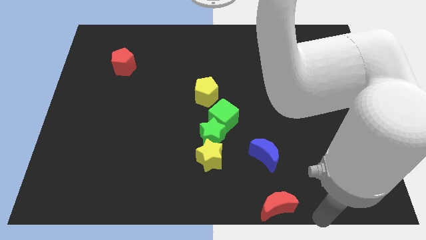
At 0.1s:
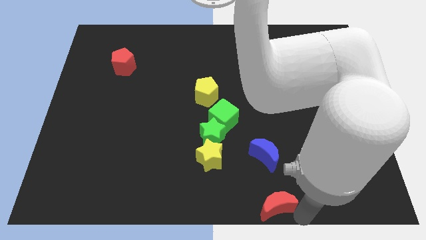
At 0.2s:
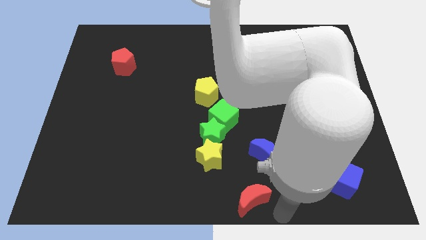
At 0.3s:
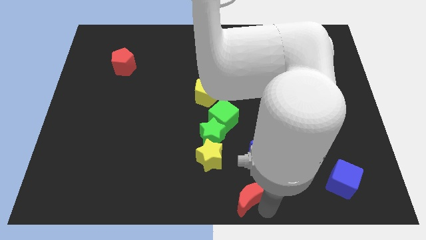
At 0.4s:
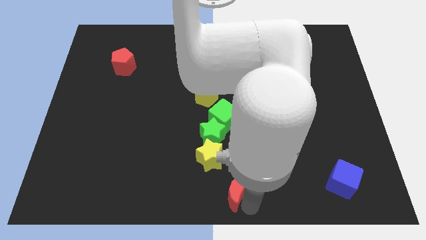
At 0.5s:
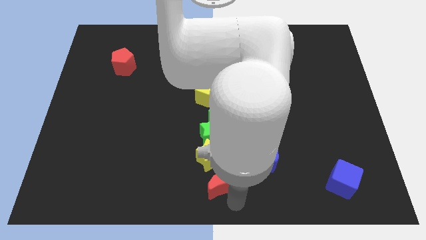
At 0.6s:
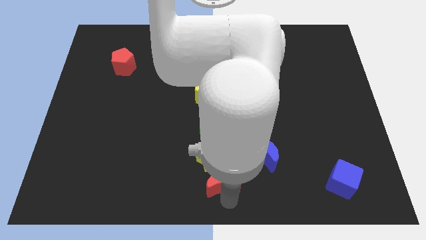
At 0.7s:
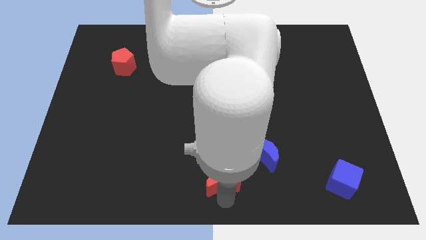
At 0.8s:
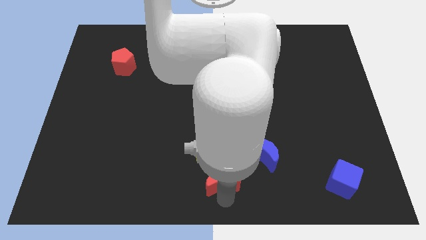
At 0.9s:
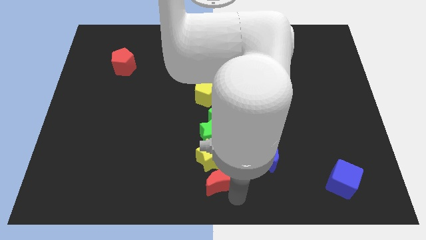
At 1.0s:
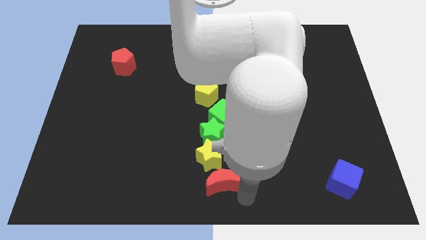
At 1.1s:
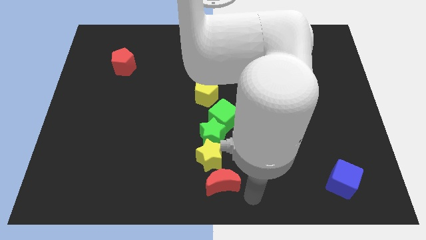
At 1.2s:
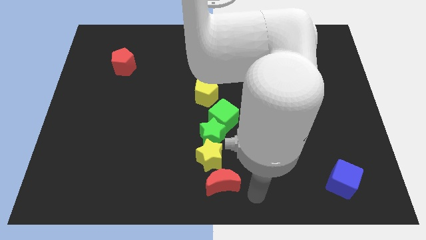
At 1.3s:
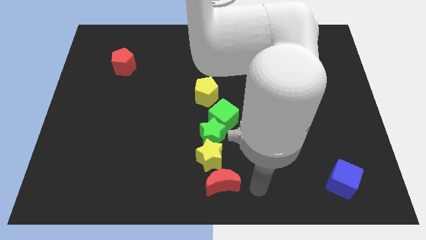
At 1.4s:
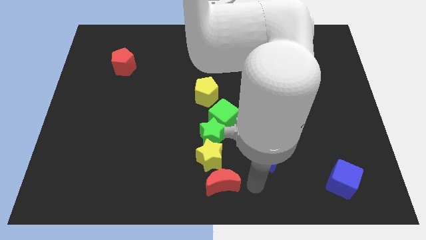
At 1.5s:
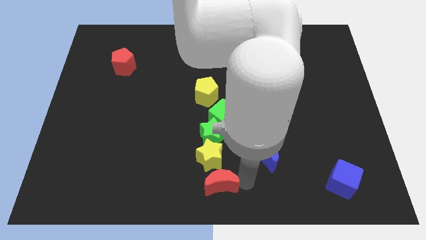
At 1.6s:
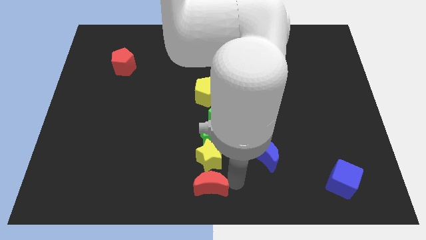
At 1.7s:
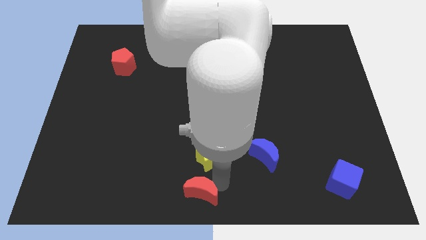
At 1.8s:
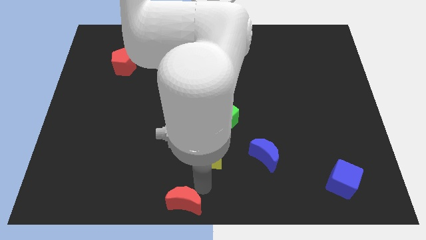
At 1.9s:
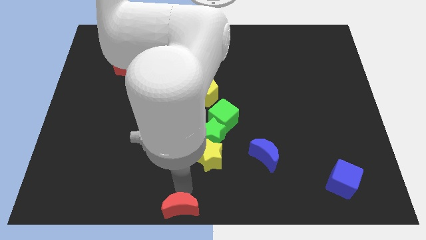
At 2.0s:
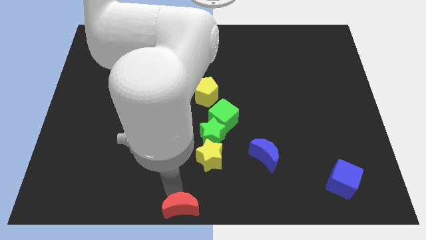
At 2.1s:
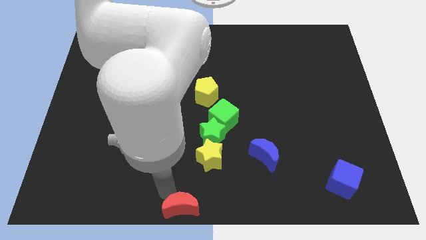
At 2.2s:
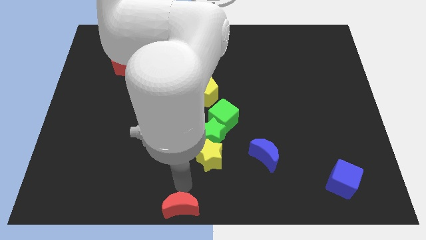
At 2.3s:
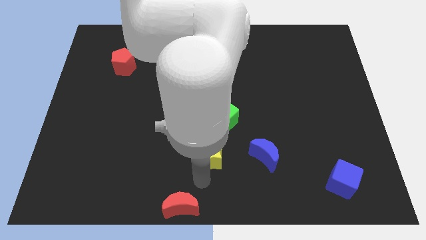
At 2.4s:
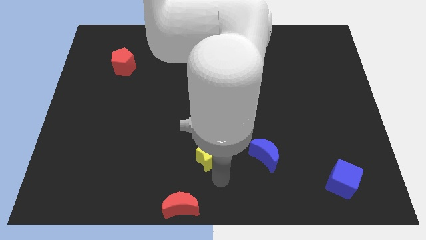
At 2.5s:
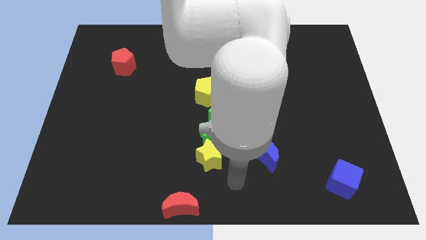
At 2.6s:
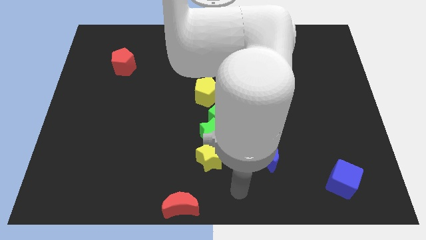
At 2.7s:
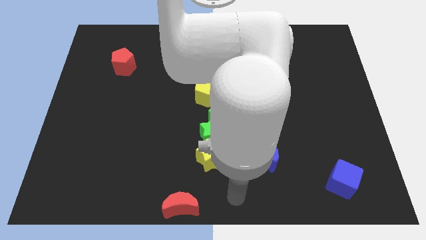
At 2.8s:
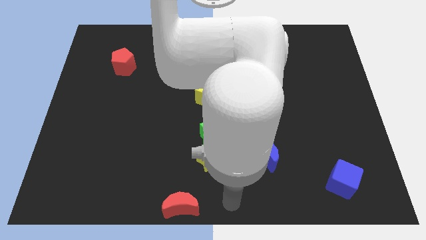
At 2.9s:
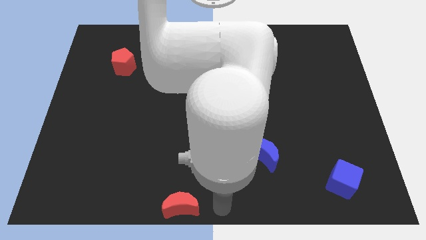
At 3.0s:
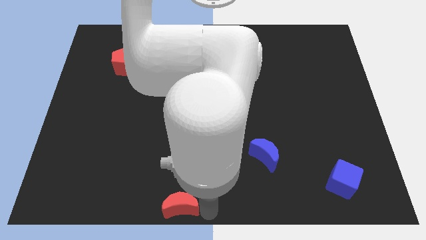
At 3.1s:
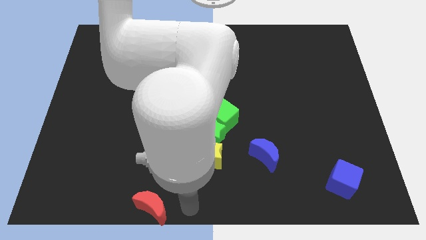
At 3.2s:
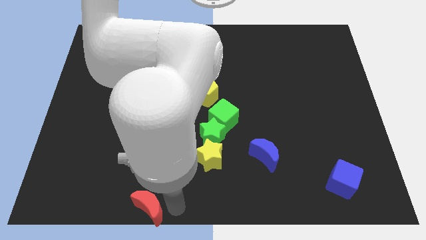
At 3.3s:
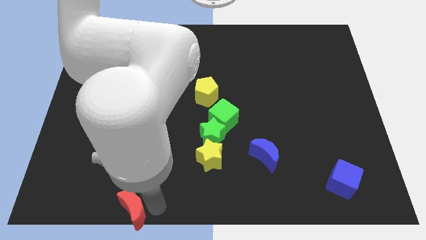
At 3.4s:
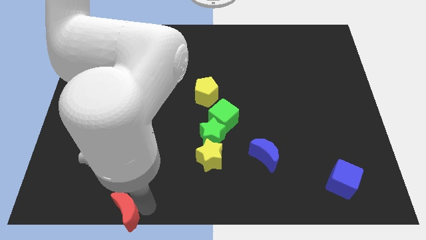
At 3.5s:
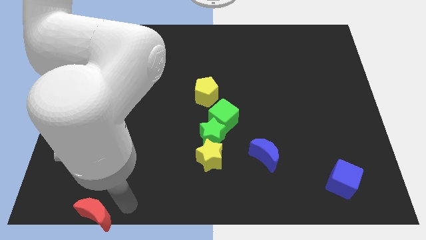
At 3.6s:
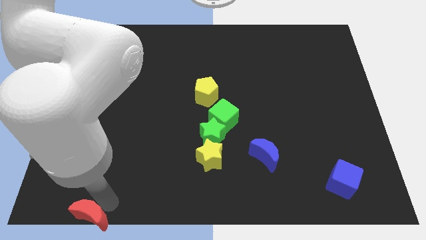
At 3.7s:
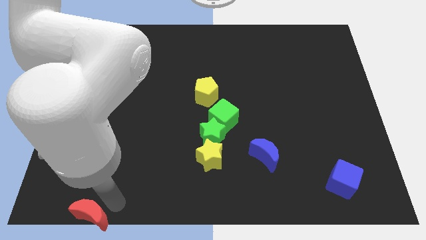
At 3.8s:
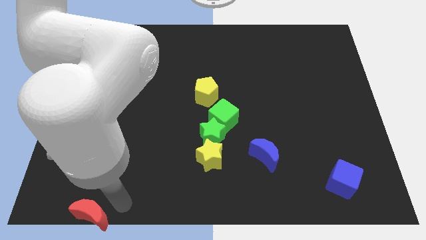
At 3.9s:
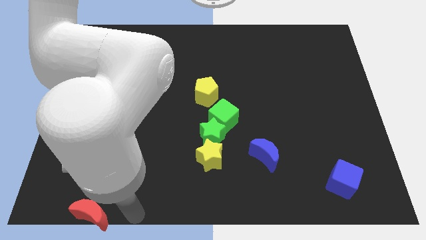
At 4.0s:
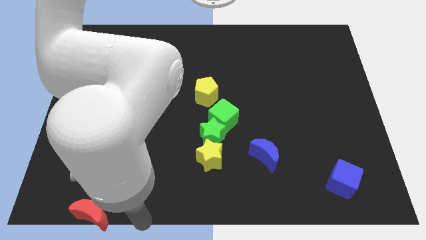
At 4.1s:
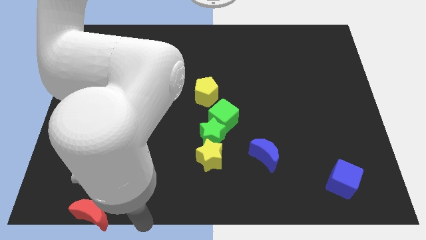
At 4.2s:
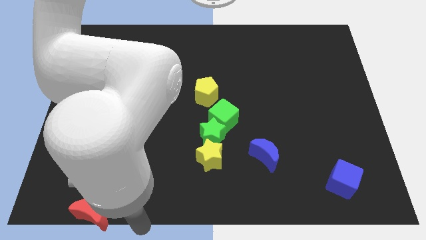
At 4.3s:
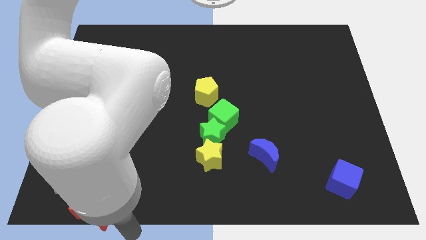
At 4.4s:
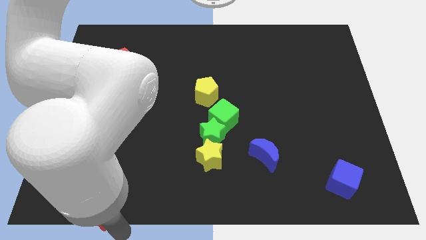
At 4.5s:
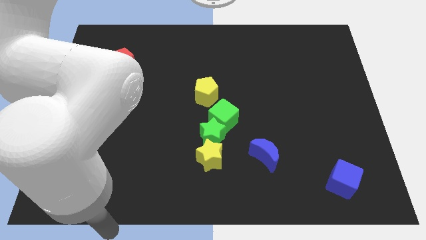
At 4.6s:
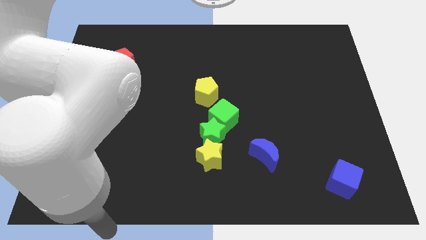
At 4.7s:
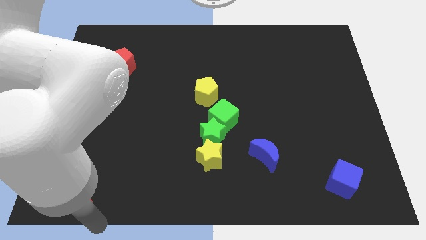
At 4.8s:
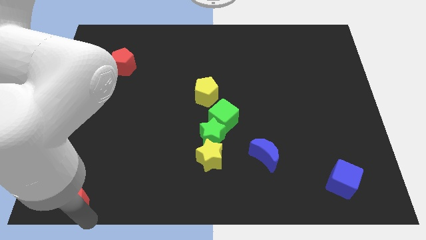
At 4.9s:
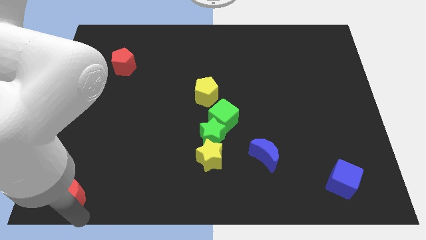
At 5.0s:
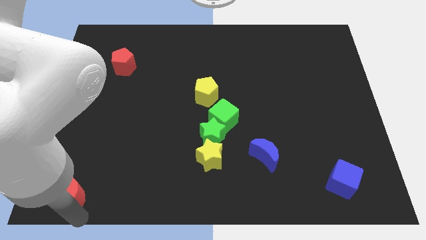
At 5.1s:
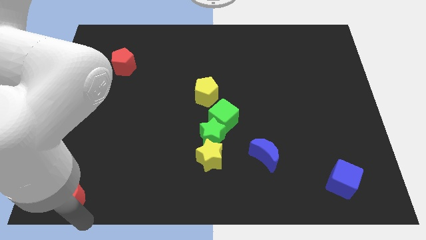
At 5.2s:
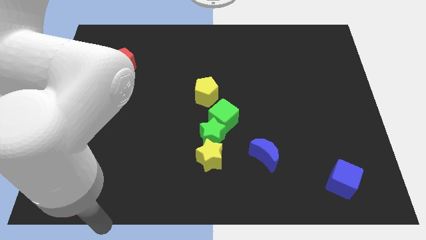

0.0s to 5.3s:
push the red crescent towards the bottom left of the table

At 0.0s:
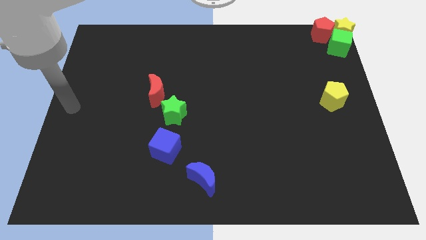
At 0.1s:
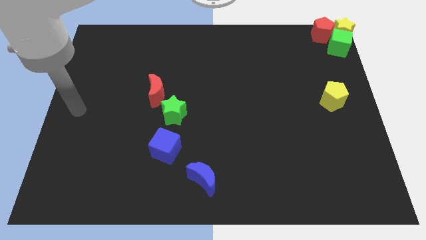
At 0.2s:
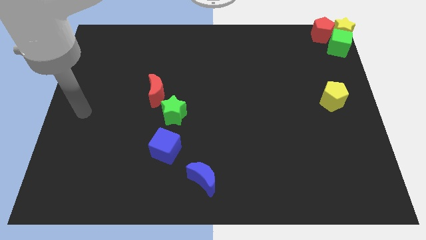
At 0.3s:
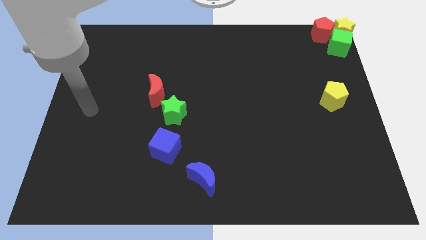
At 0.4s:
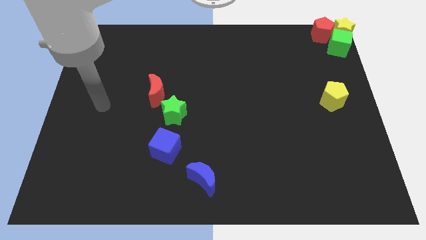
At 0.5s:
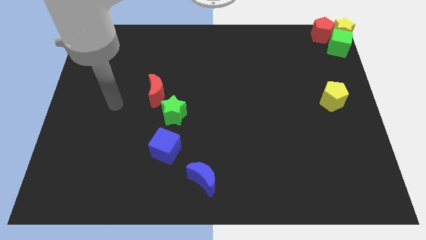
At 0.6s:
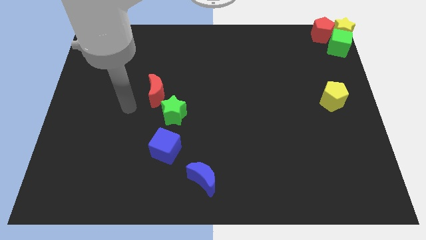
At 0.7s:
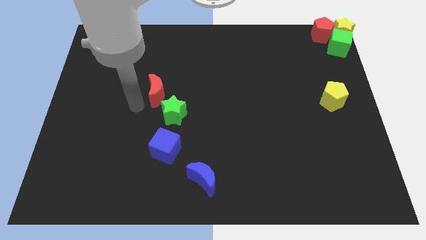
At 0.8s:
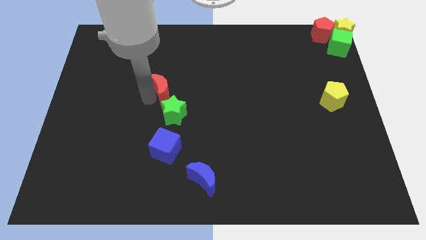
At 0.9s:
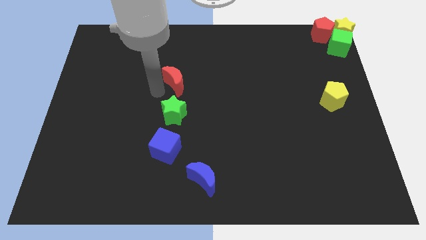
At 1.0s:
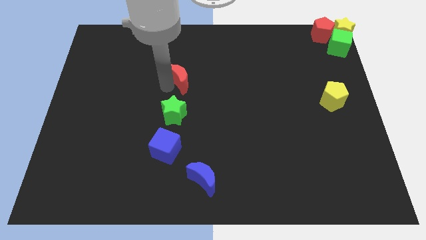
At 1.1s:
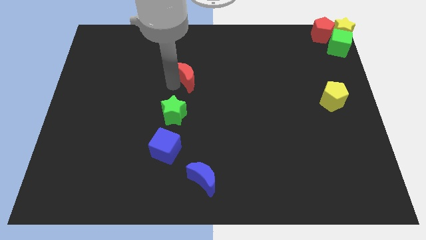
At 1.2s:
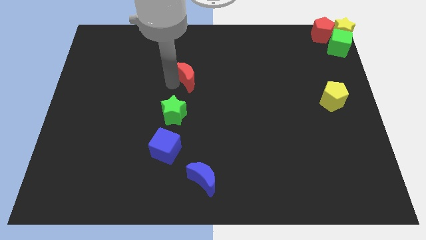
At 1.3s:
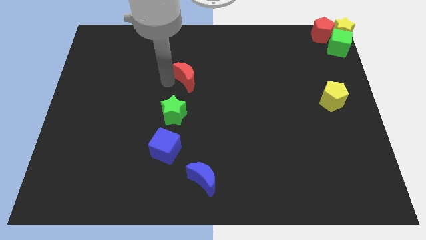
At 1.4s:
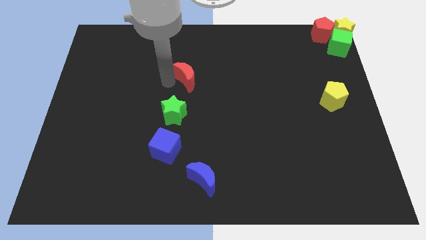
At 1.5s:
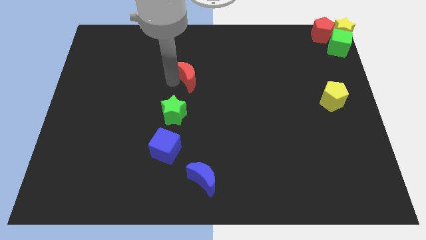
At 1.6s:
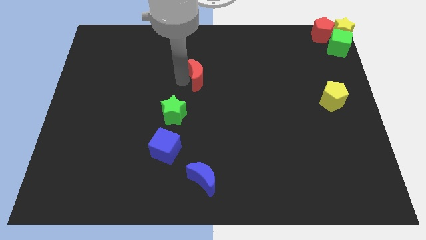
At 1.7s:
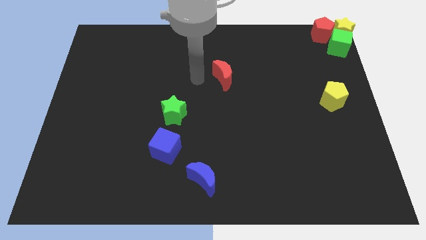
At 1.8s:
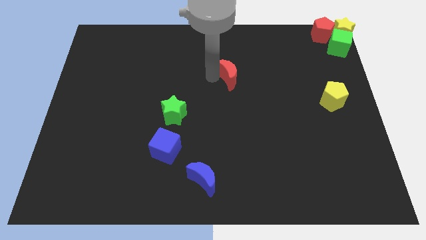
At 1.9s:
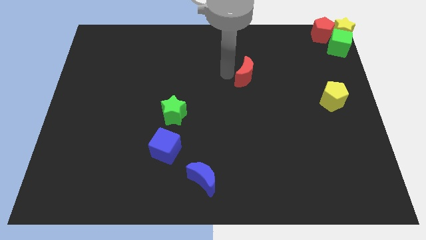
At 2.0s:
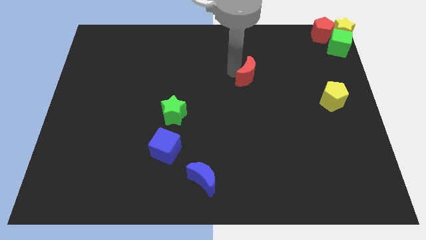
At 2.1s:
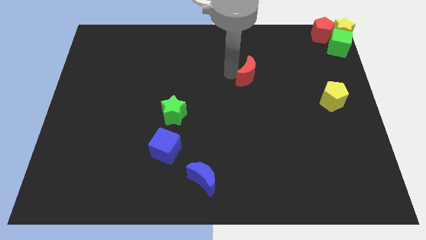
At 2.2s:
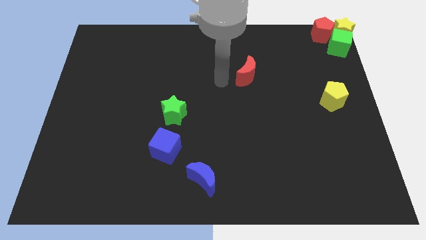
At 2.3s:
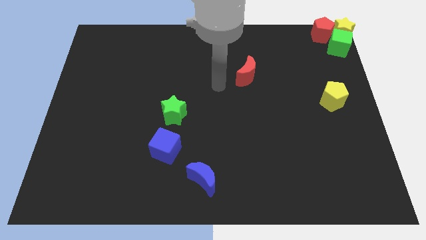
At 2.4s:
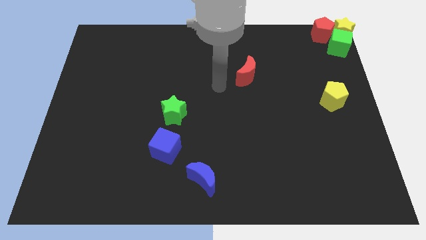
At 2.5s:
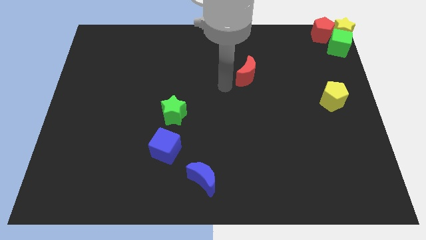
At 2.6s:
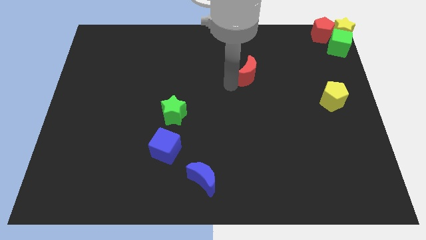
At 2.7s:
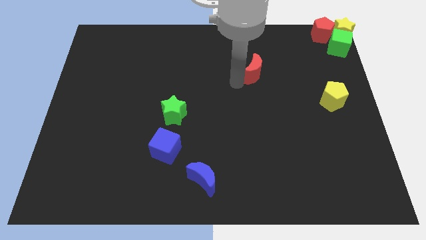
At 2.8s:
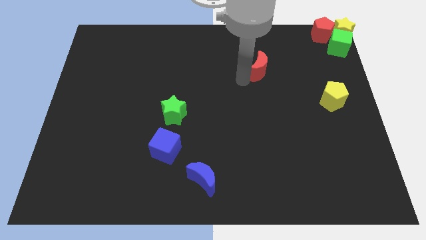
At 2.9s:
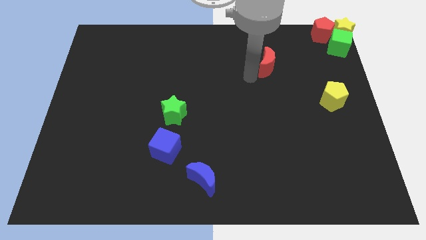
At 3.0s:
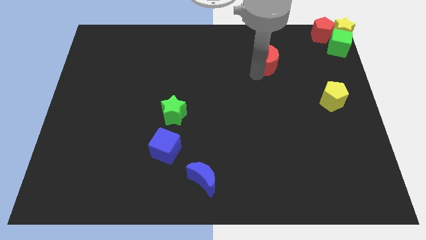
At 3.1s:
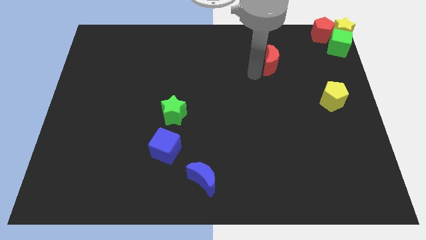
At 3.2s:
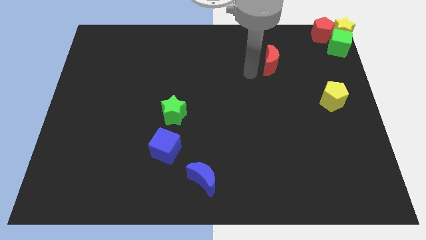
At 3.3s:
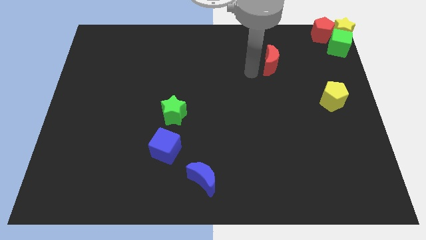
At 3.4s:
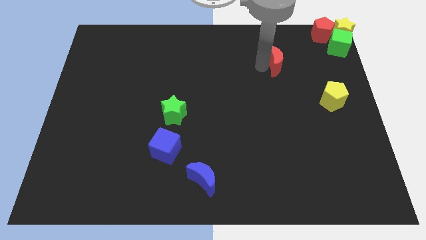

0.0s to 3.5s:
move the red moon diagonally at the top left side of the yellow pentagon

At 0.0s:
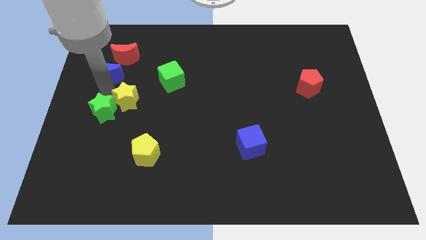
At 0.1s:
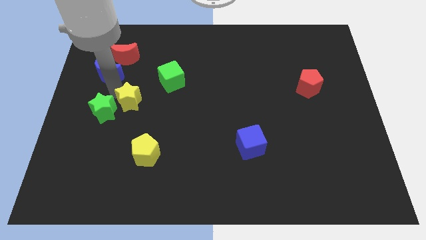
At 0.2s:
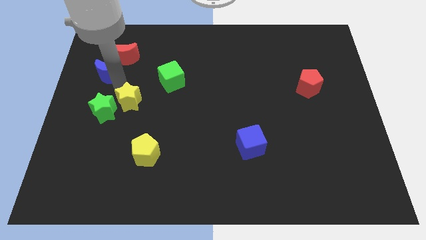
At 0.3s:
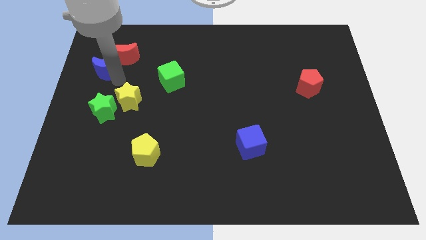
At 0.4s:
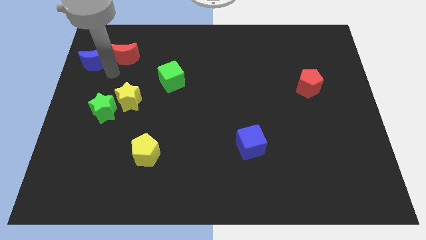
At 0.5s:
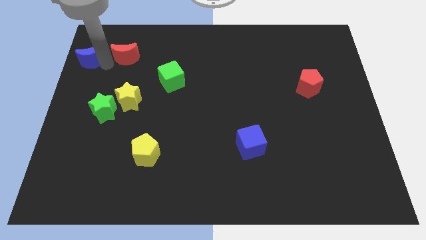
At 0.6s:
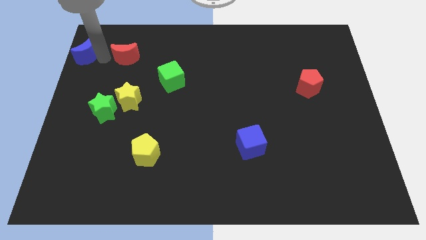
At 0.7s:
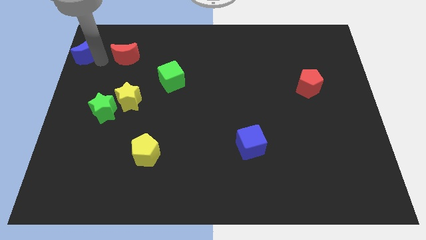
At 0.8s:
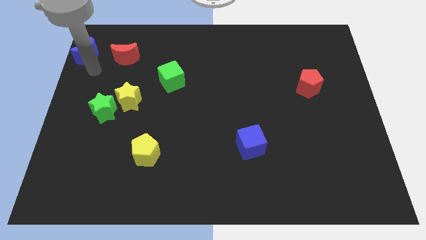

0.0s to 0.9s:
push blue moon to the left of red moon
